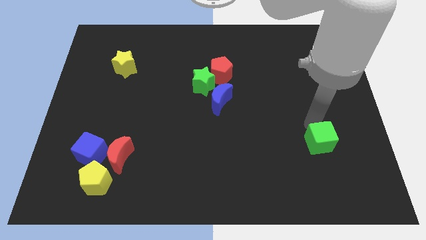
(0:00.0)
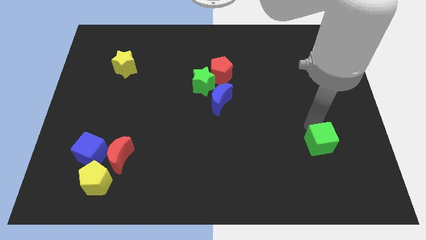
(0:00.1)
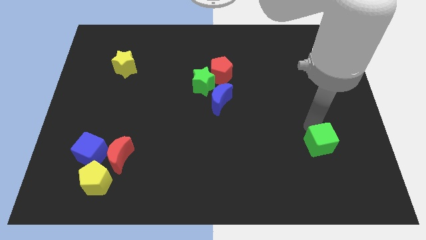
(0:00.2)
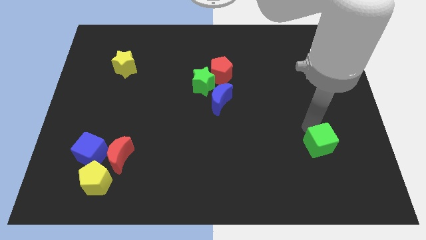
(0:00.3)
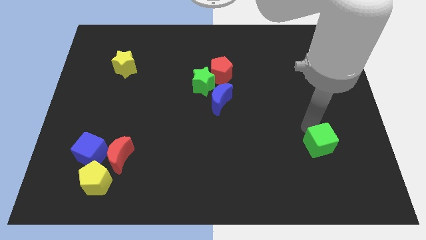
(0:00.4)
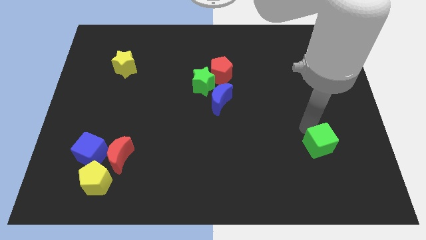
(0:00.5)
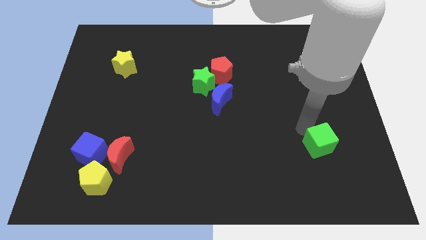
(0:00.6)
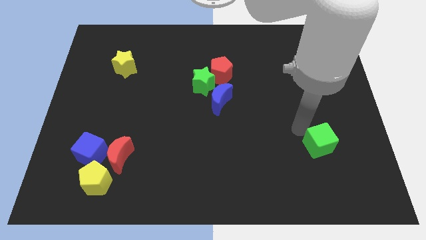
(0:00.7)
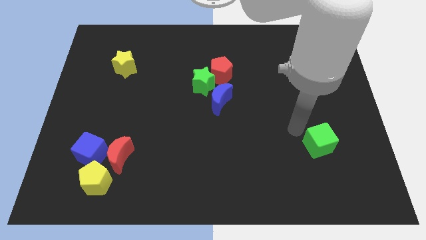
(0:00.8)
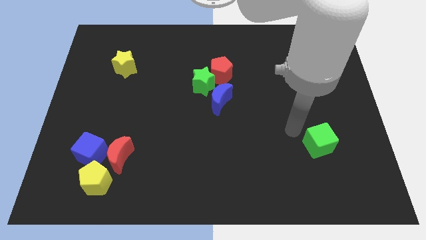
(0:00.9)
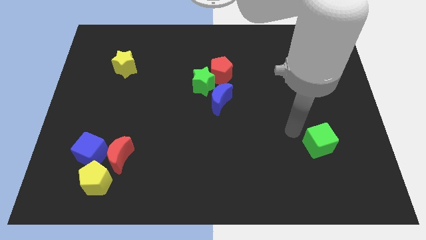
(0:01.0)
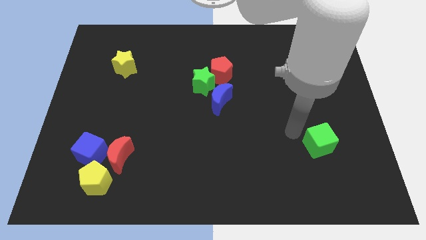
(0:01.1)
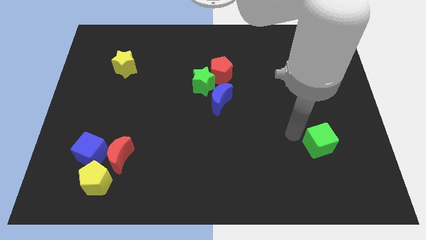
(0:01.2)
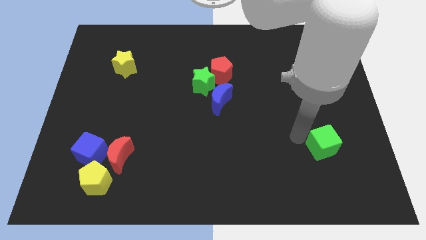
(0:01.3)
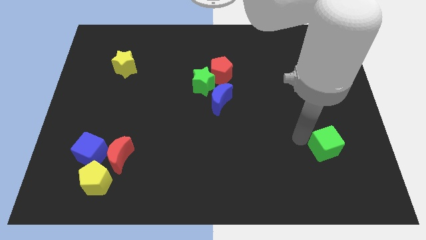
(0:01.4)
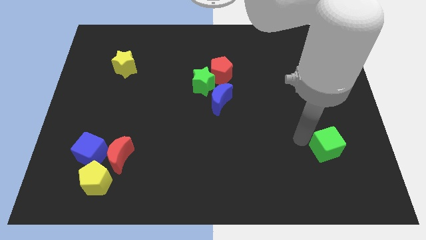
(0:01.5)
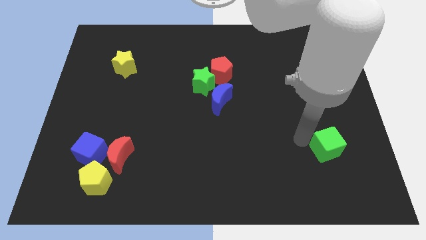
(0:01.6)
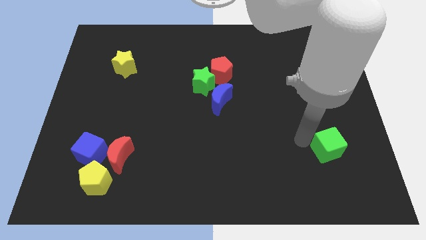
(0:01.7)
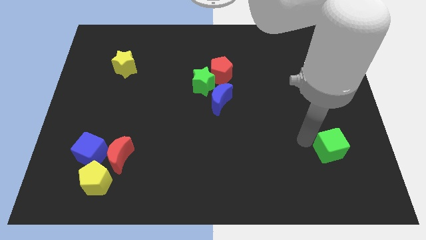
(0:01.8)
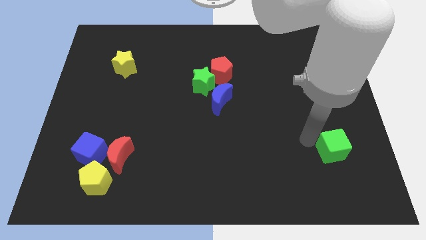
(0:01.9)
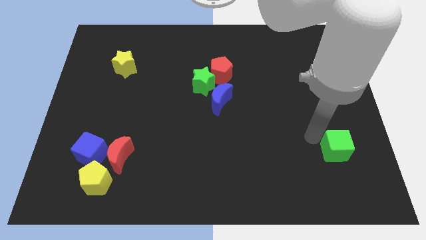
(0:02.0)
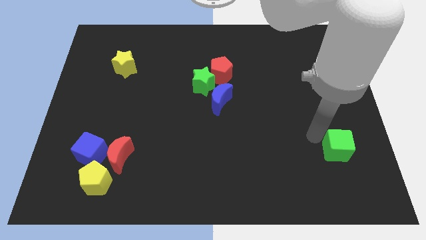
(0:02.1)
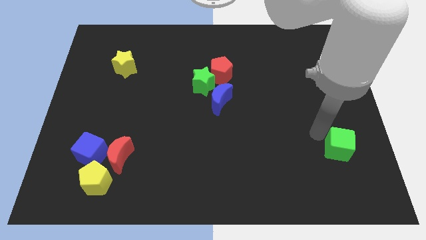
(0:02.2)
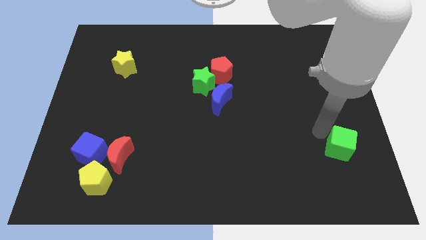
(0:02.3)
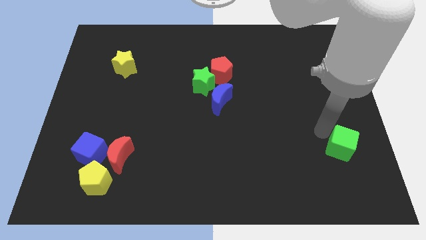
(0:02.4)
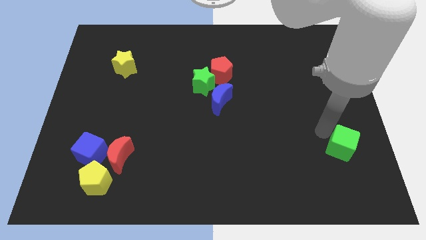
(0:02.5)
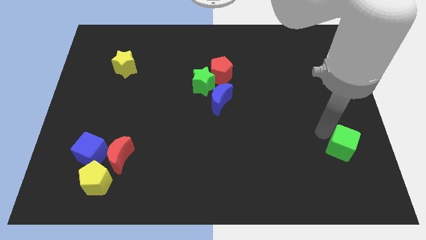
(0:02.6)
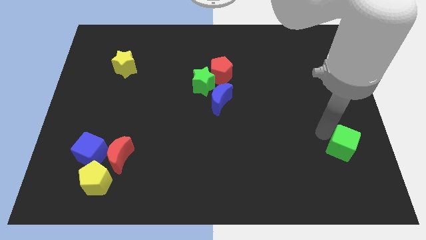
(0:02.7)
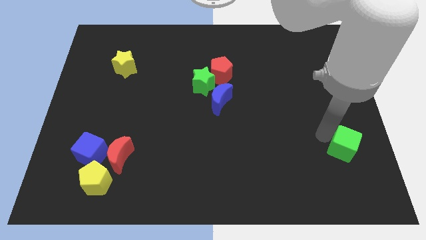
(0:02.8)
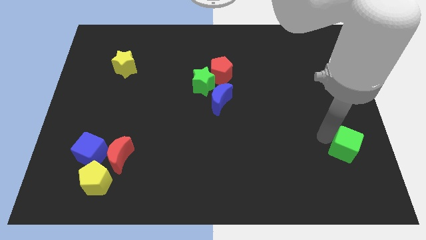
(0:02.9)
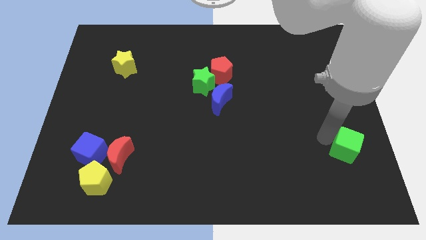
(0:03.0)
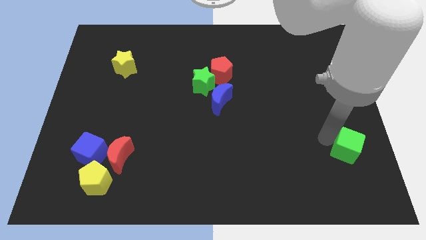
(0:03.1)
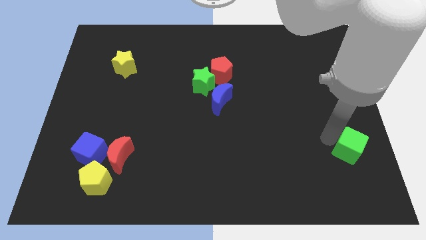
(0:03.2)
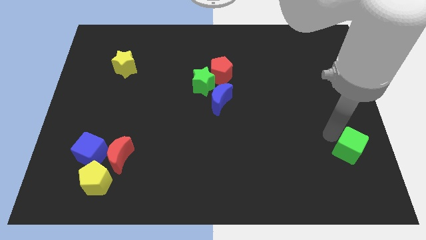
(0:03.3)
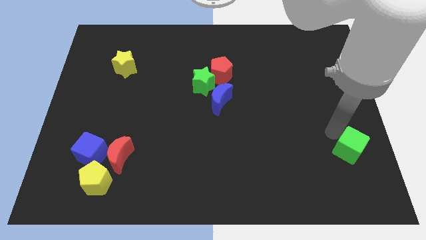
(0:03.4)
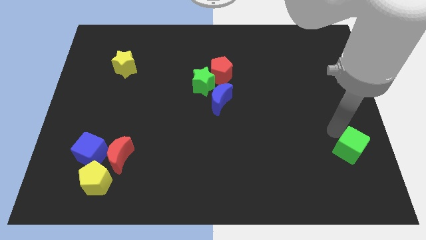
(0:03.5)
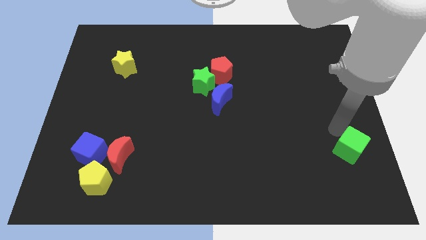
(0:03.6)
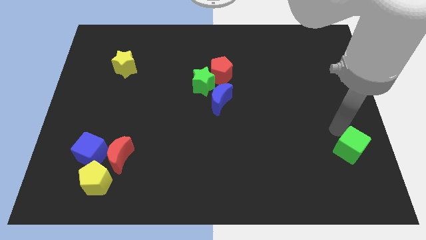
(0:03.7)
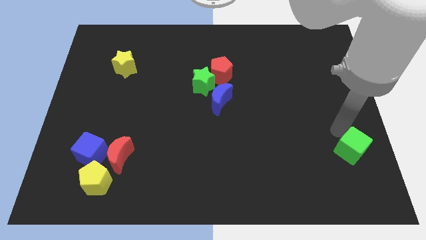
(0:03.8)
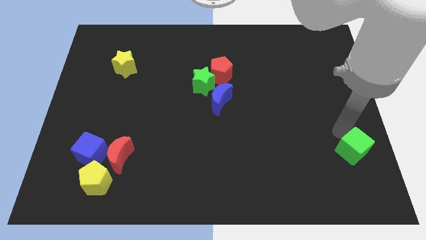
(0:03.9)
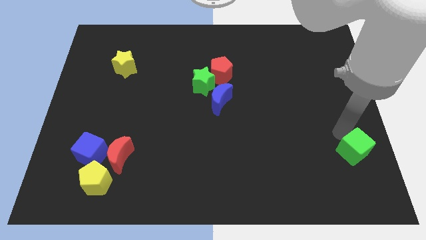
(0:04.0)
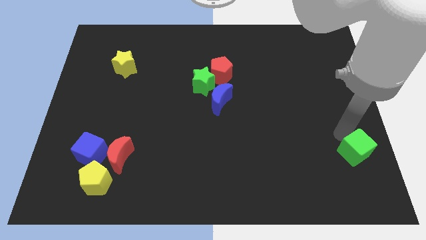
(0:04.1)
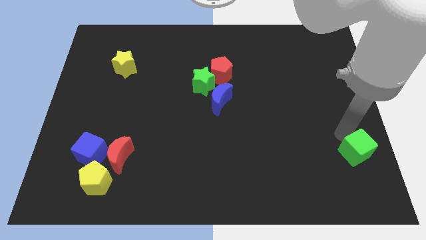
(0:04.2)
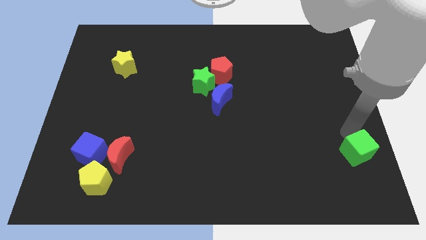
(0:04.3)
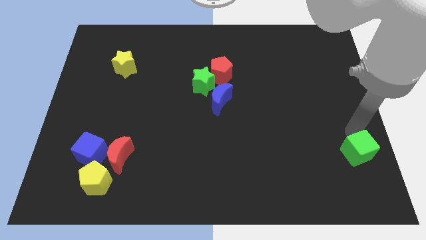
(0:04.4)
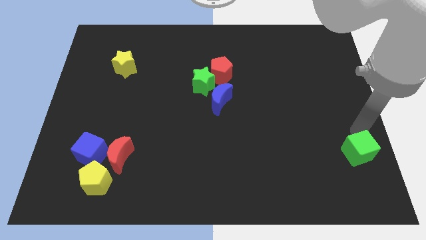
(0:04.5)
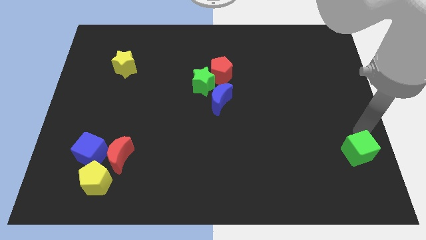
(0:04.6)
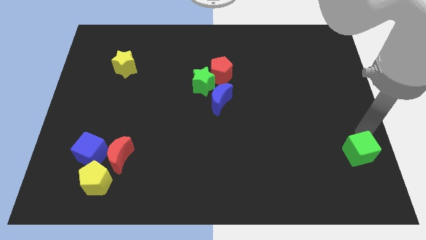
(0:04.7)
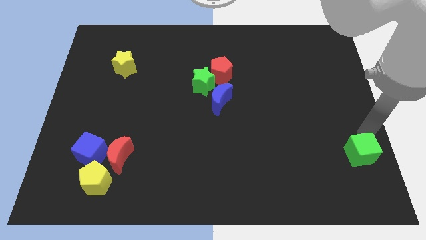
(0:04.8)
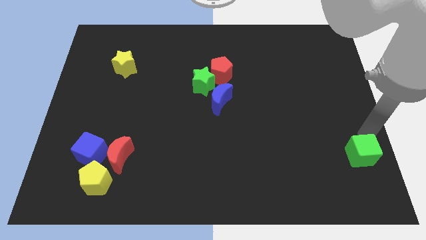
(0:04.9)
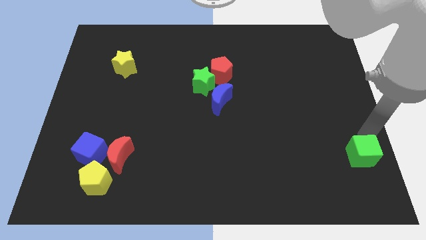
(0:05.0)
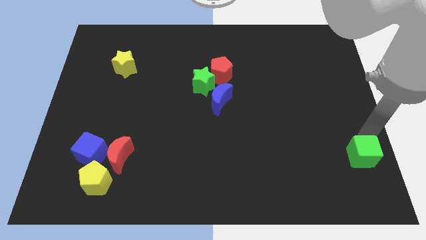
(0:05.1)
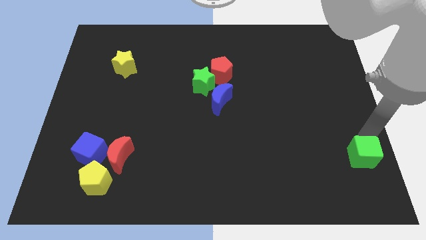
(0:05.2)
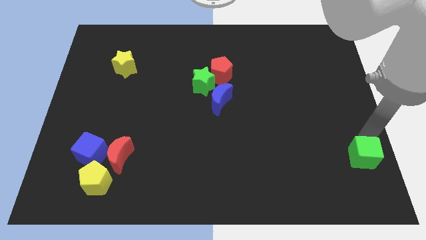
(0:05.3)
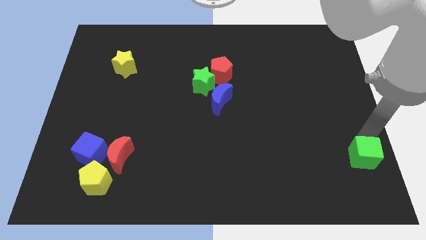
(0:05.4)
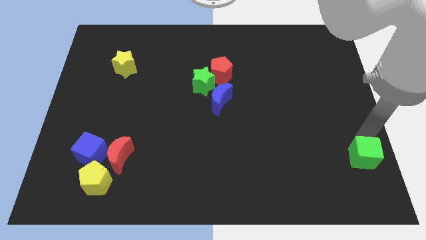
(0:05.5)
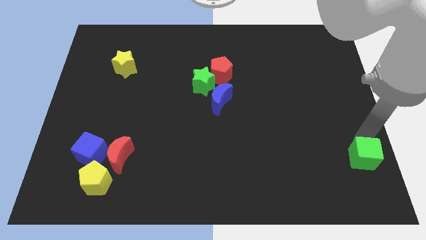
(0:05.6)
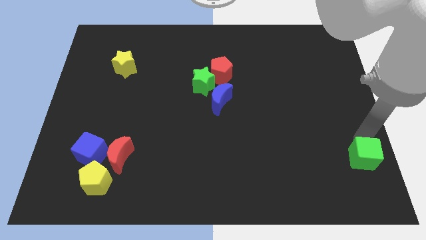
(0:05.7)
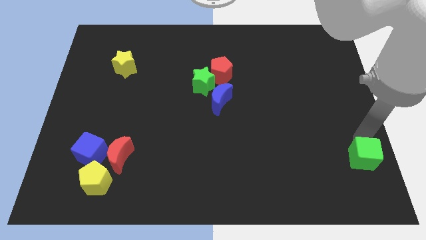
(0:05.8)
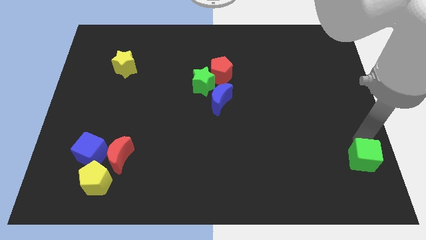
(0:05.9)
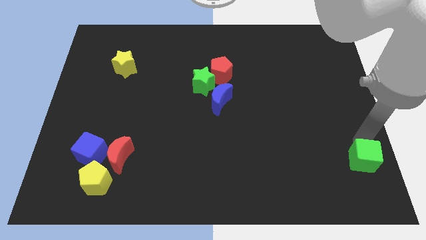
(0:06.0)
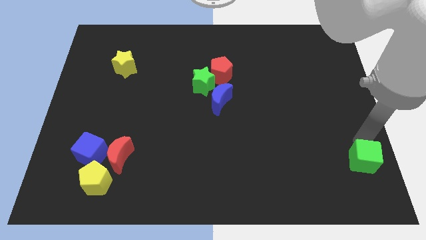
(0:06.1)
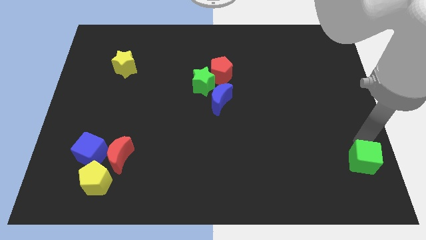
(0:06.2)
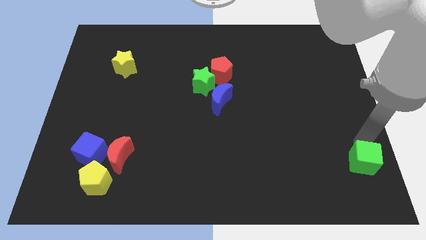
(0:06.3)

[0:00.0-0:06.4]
push the green cube to the bottom right of the board

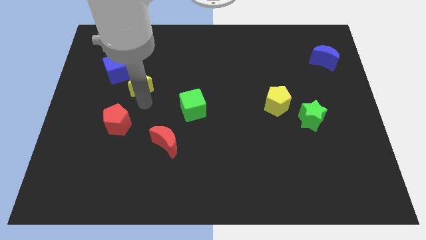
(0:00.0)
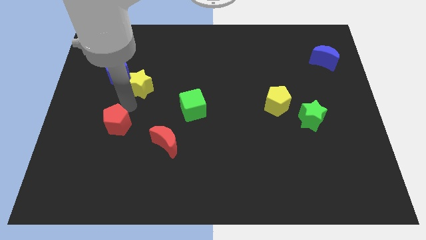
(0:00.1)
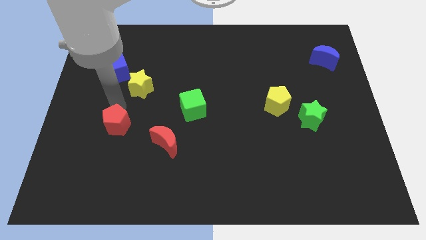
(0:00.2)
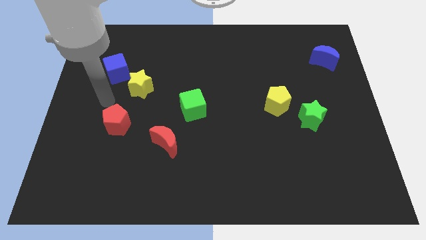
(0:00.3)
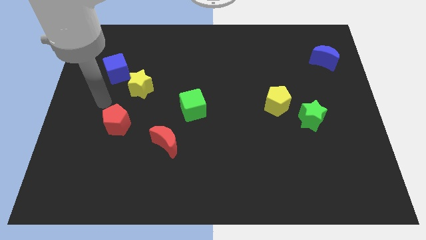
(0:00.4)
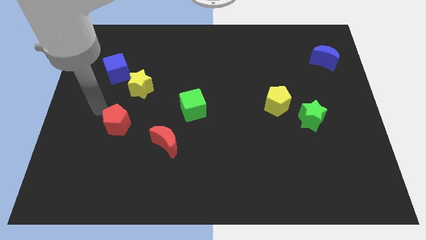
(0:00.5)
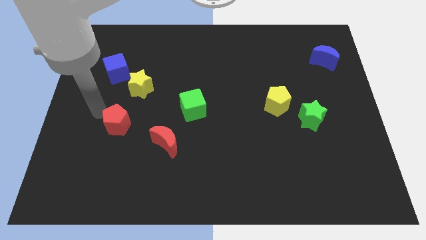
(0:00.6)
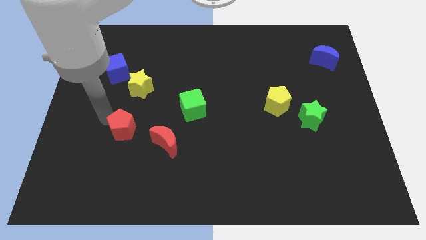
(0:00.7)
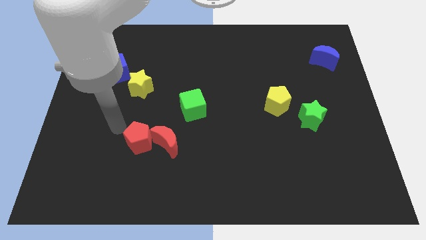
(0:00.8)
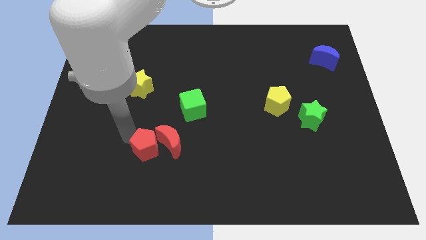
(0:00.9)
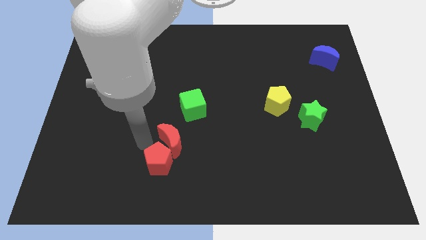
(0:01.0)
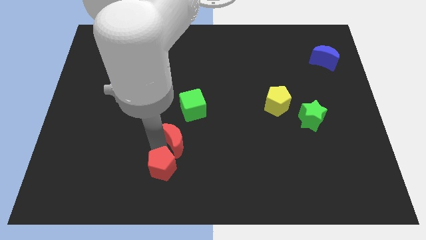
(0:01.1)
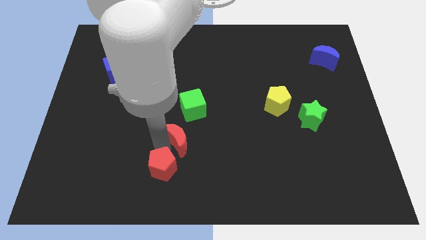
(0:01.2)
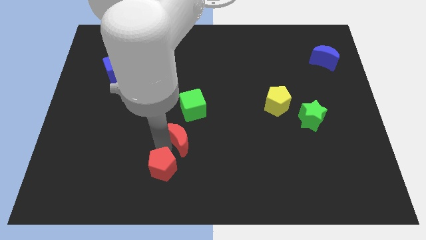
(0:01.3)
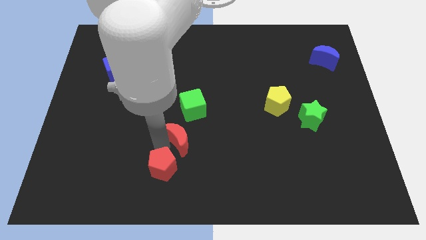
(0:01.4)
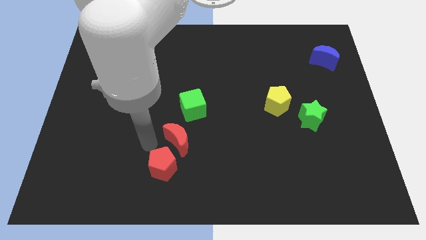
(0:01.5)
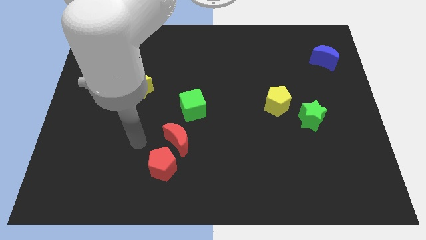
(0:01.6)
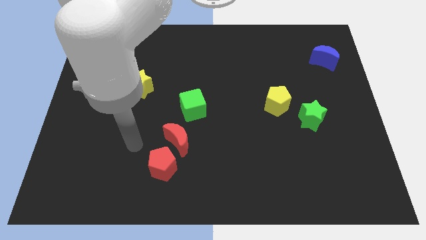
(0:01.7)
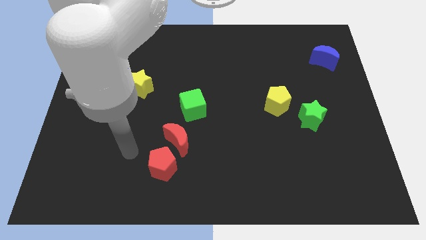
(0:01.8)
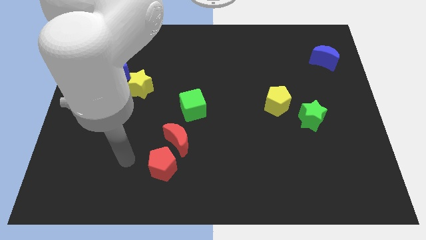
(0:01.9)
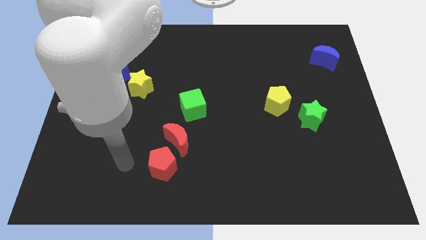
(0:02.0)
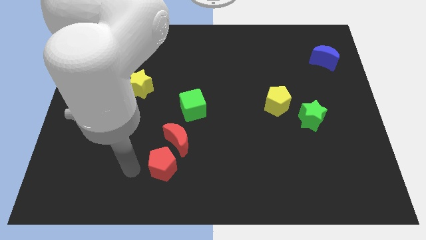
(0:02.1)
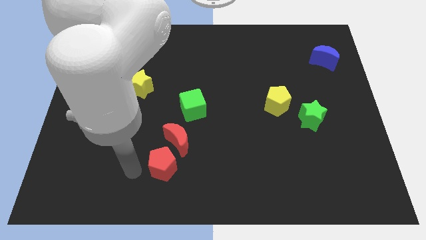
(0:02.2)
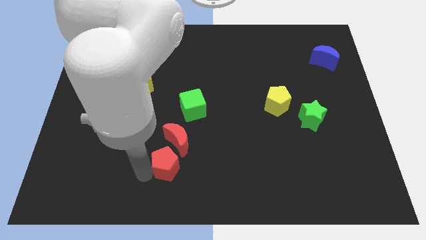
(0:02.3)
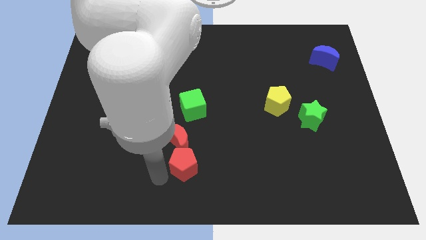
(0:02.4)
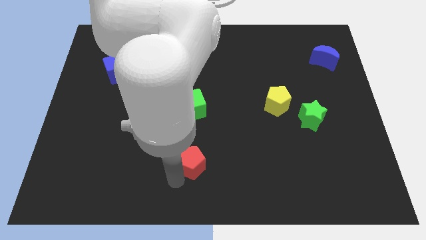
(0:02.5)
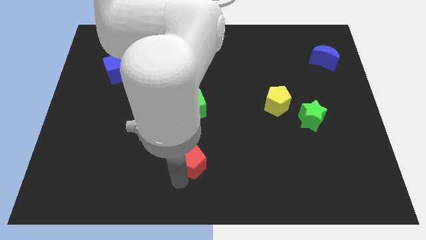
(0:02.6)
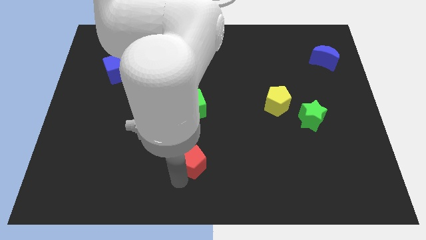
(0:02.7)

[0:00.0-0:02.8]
move the red pentagon below the red moon
